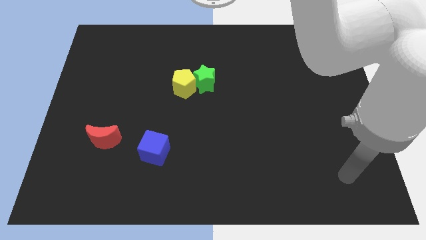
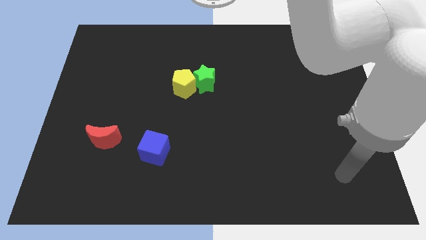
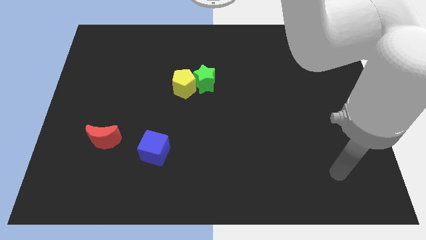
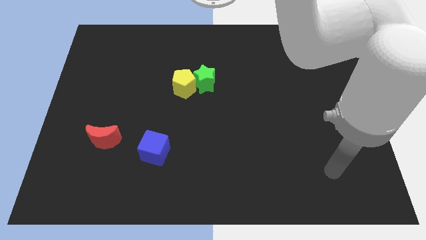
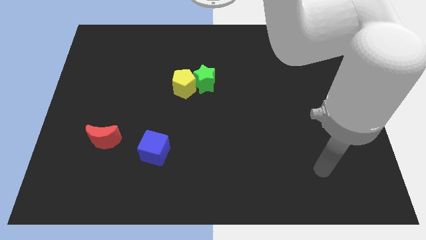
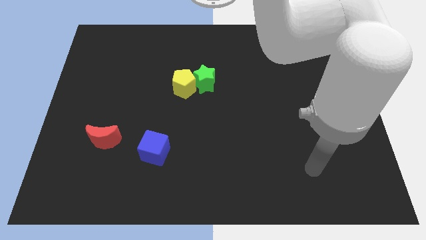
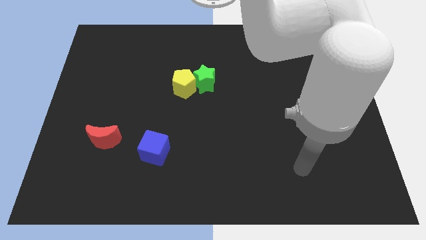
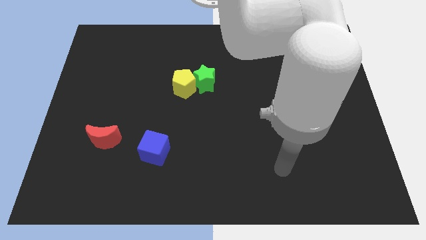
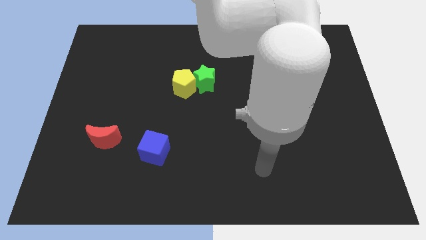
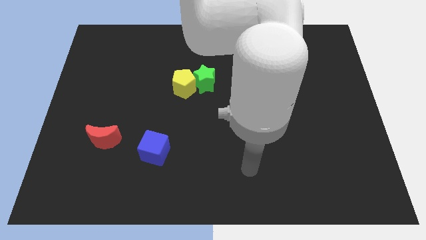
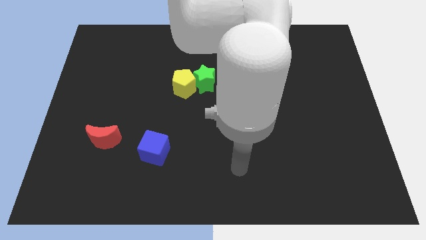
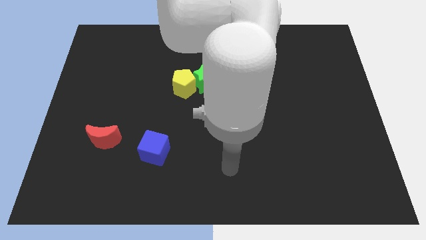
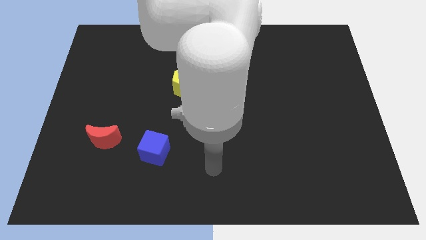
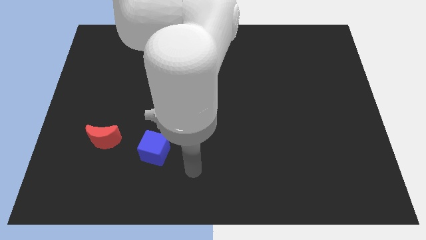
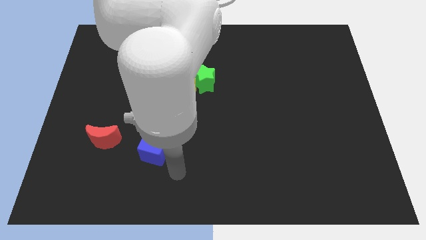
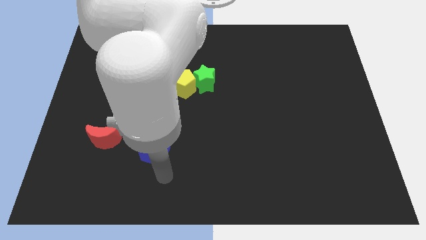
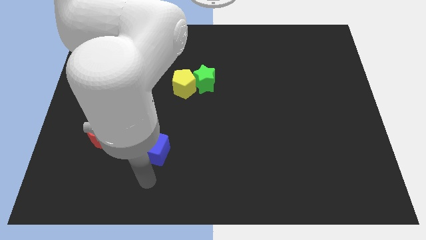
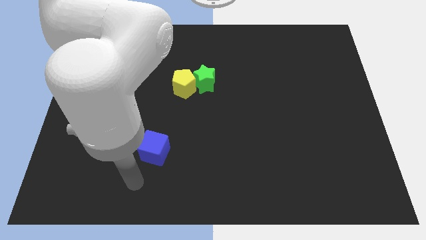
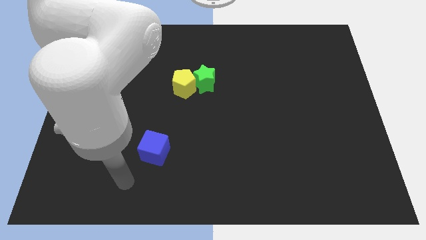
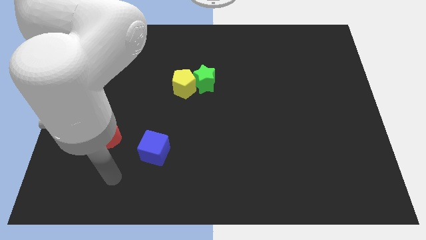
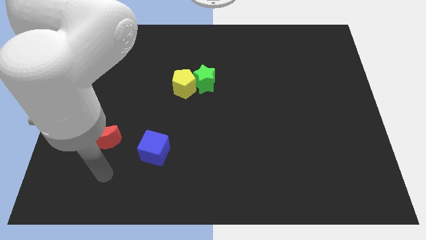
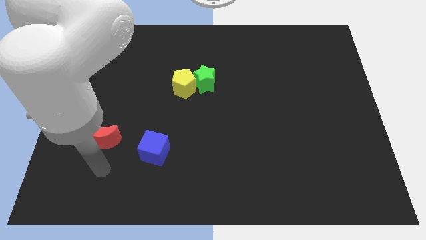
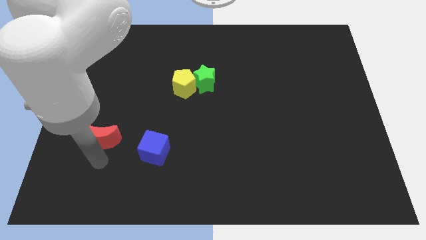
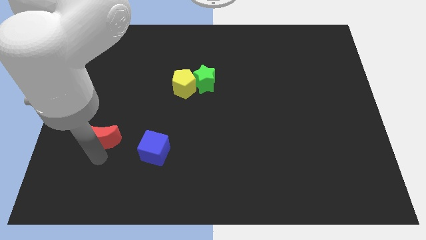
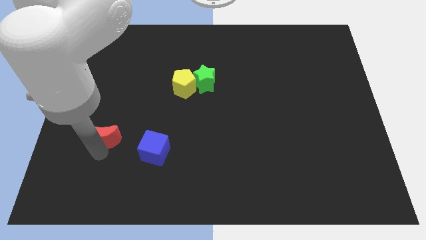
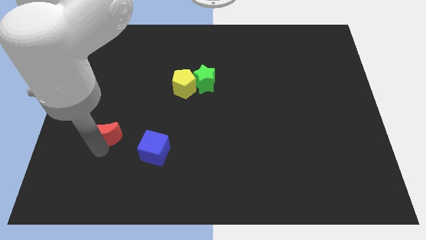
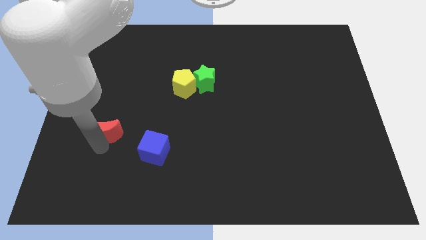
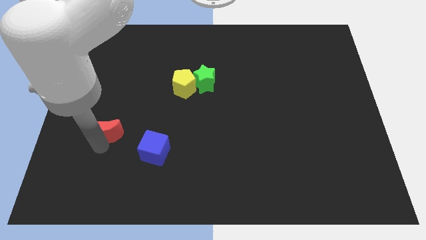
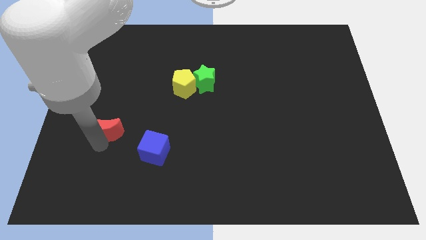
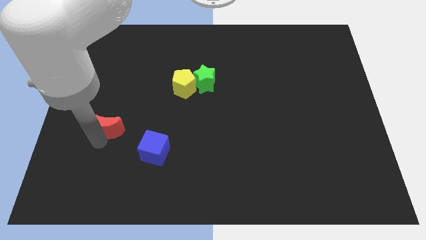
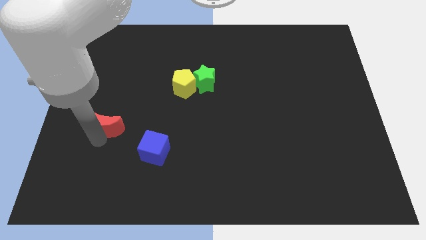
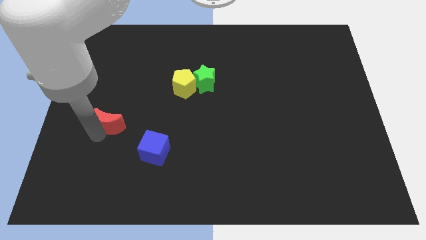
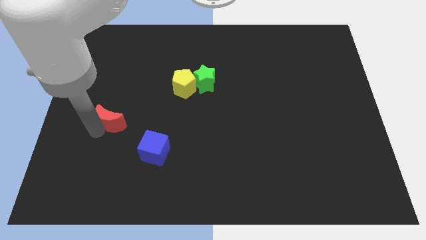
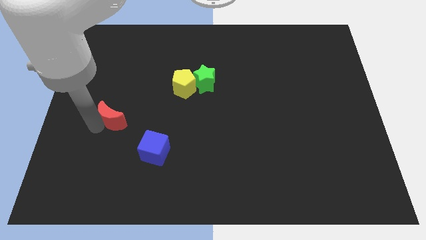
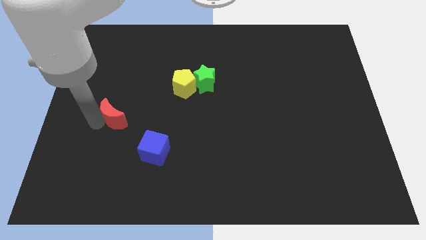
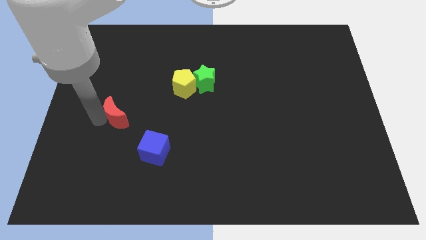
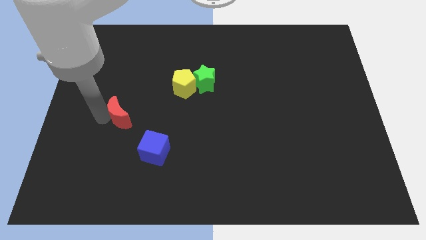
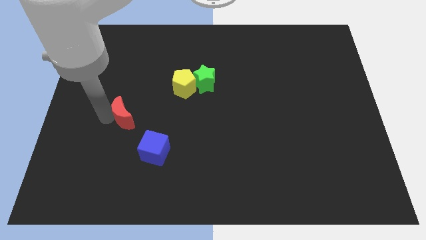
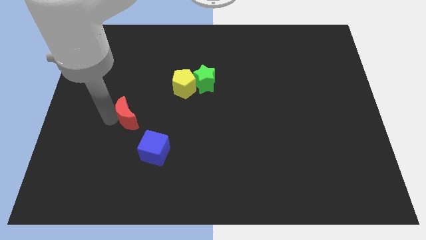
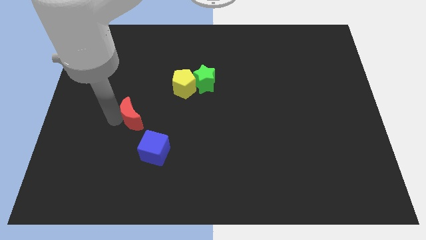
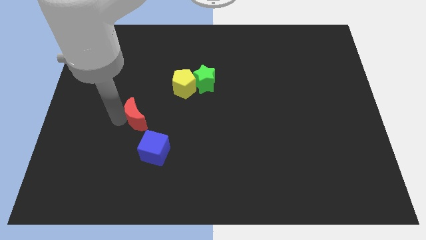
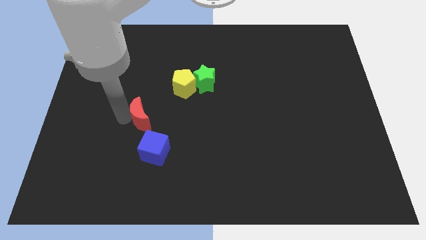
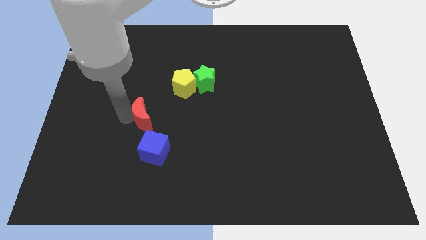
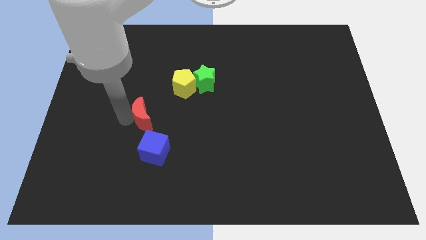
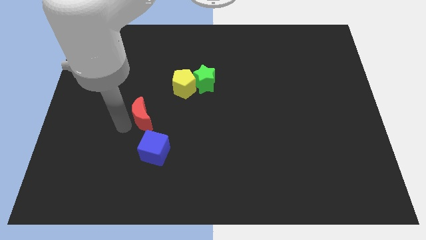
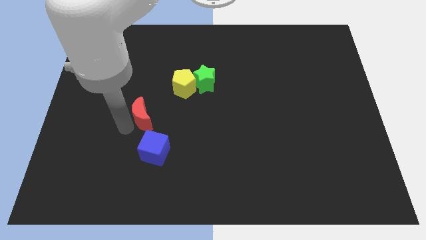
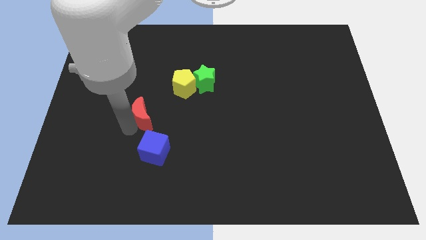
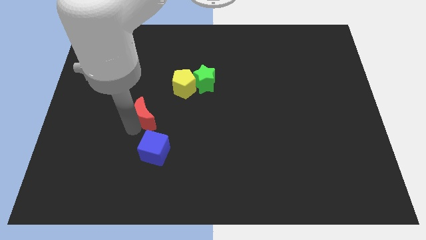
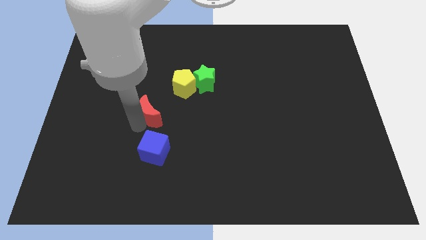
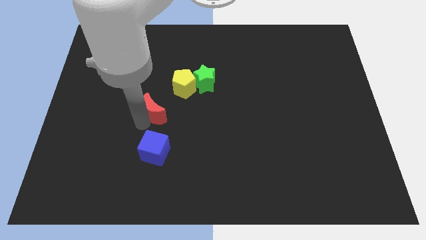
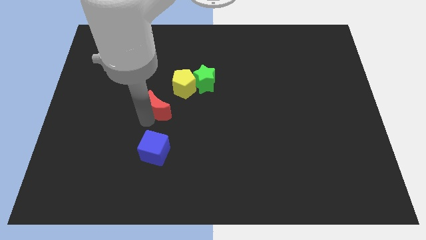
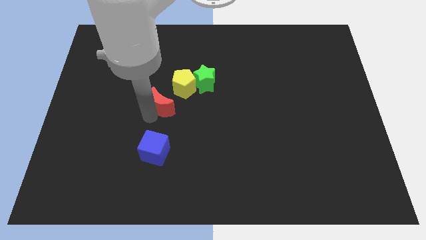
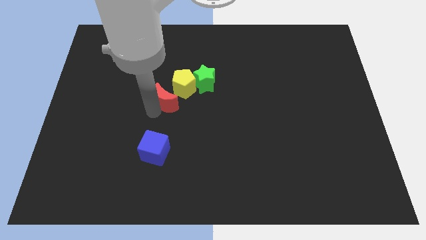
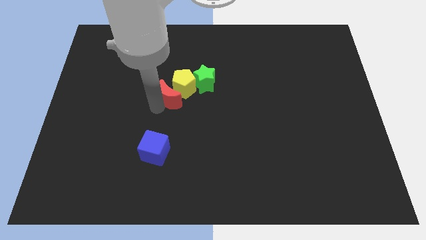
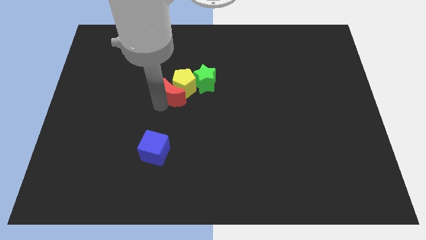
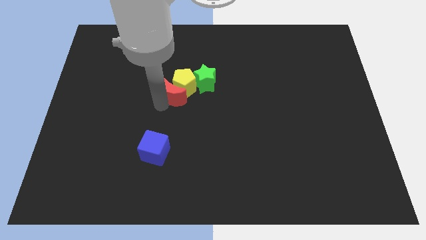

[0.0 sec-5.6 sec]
slide the red block close to the yellow block

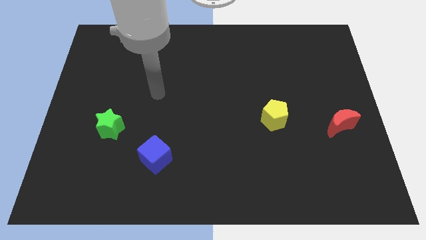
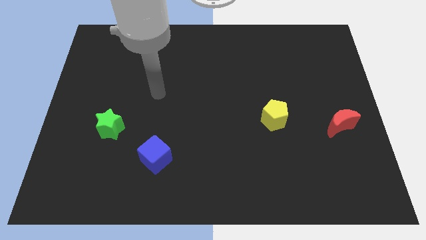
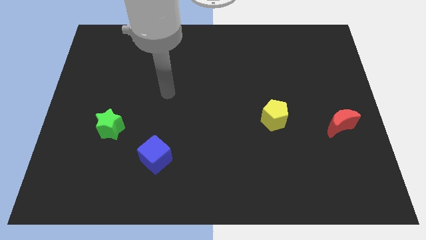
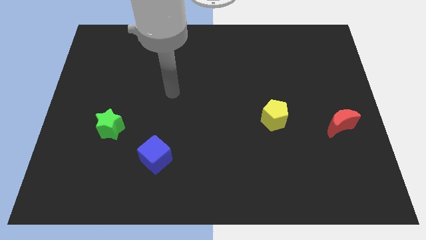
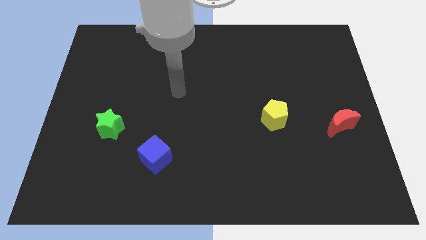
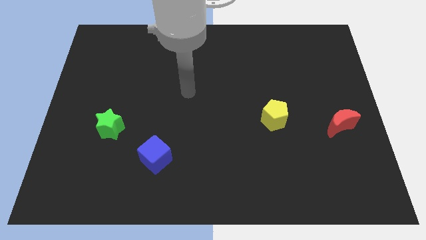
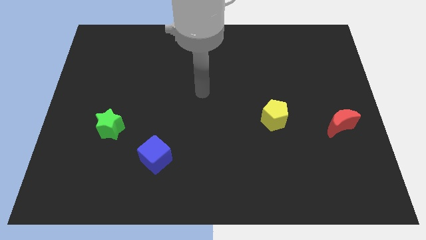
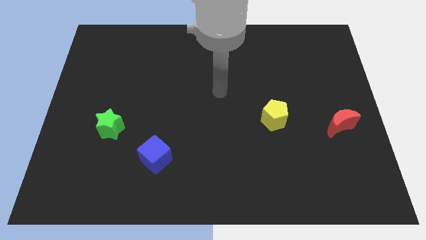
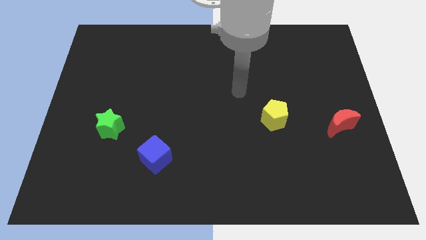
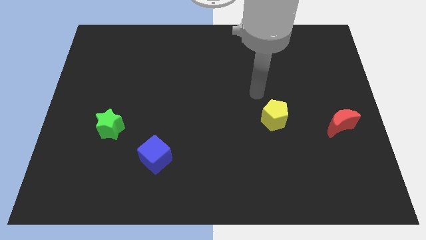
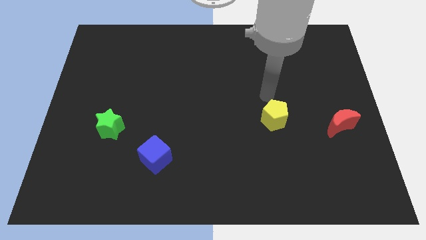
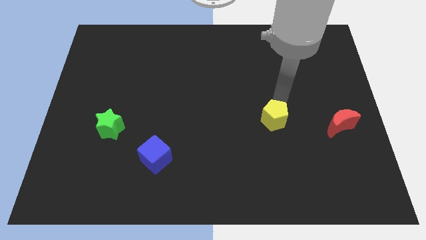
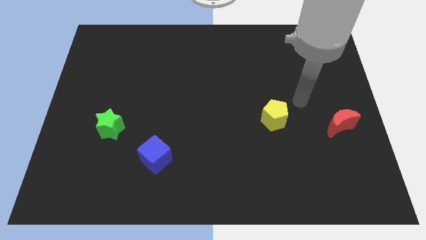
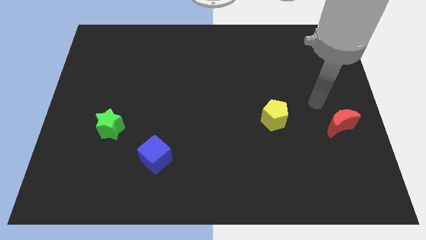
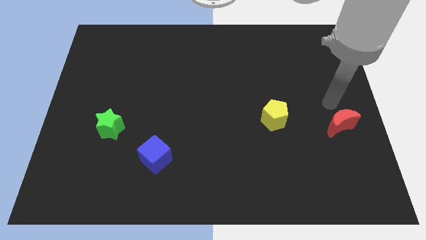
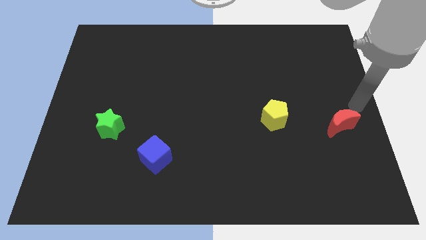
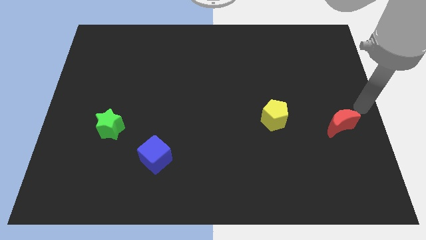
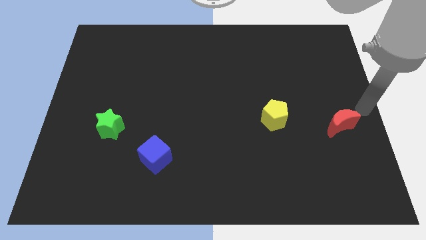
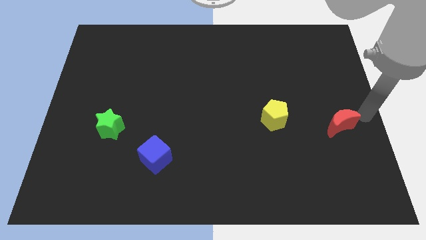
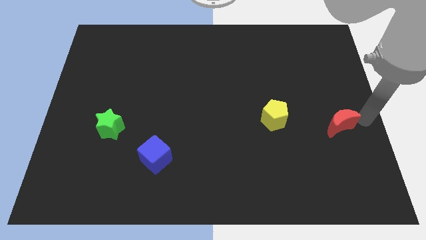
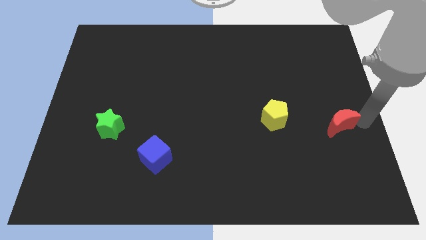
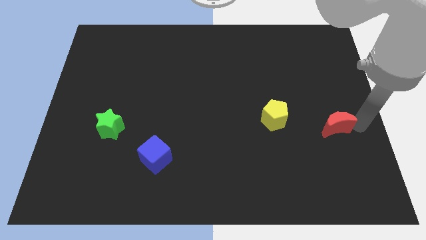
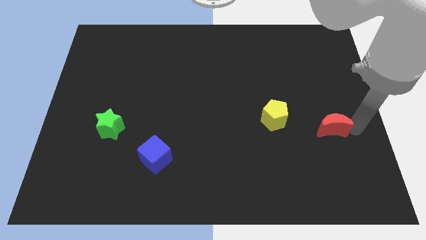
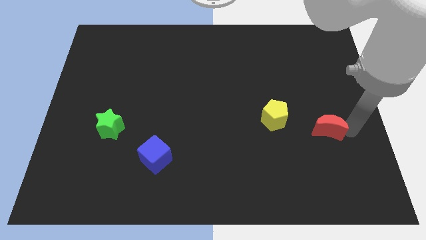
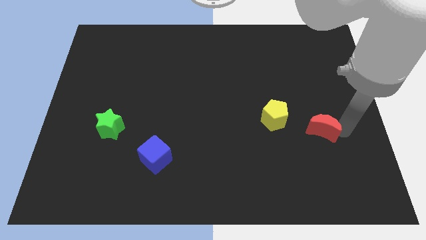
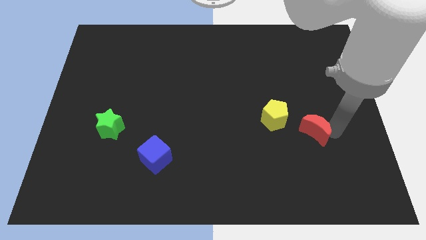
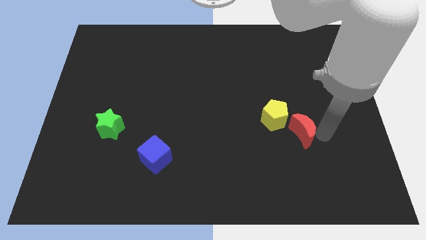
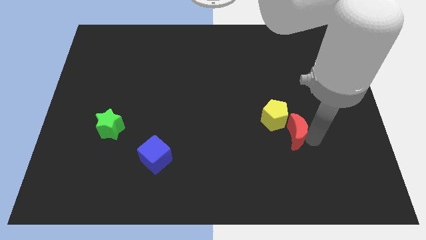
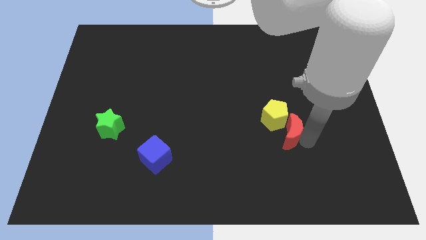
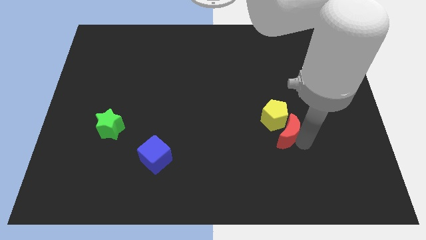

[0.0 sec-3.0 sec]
put the red block next to the pentagon

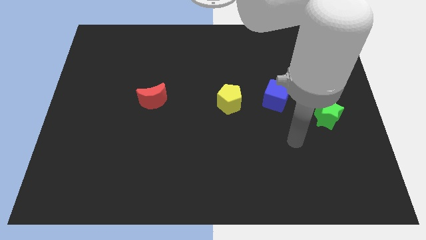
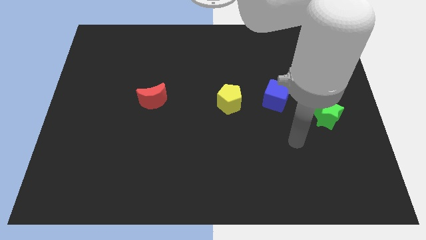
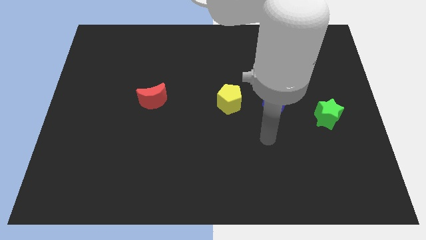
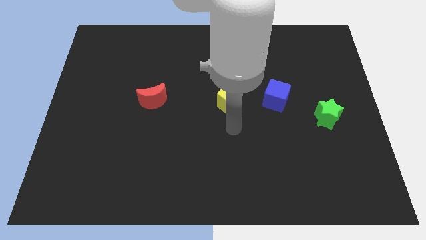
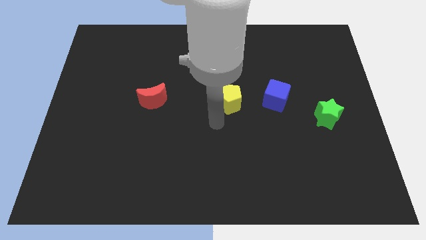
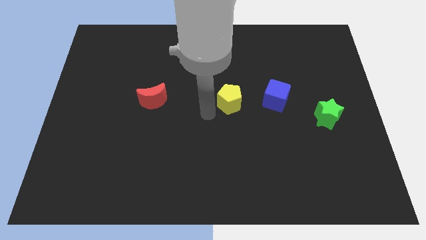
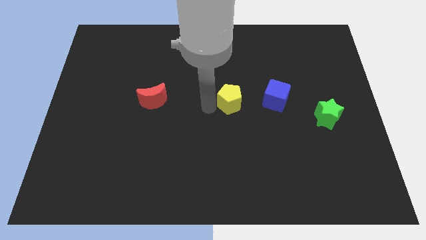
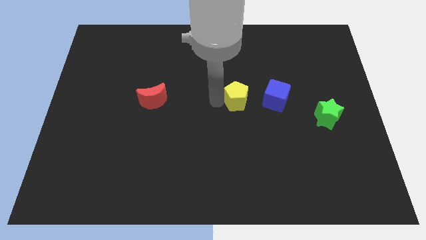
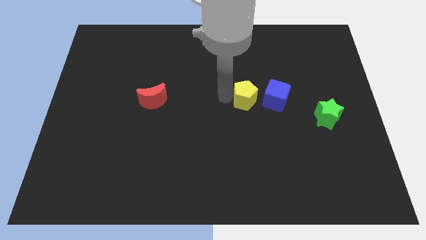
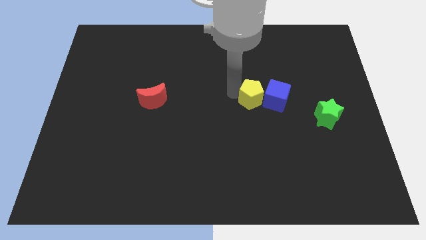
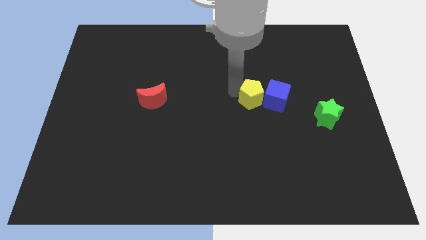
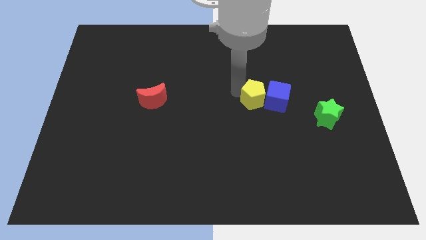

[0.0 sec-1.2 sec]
move the yellow pentagon towards the cube
